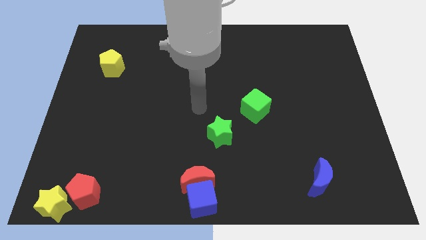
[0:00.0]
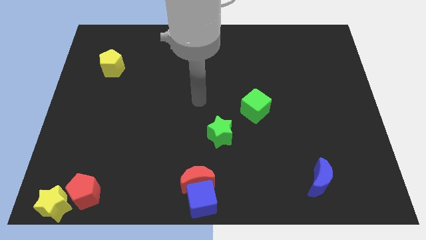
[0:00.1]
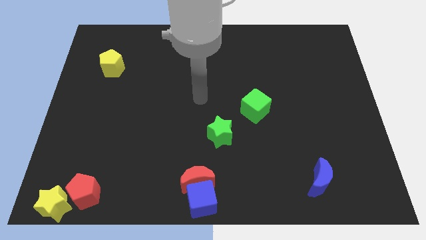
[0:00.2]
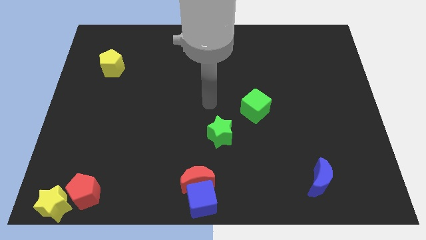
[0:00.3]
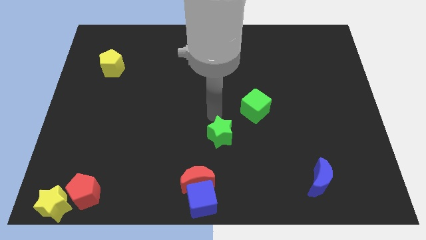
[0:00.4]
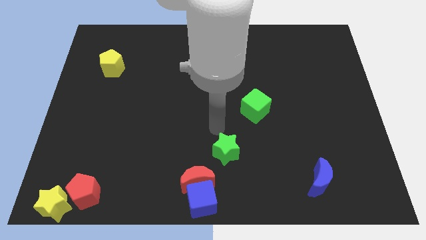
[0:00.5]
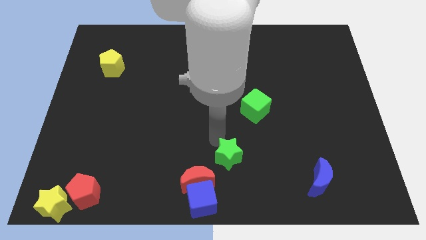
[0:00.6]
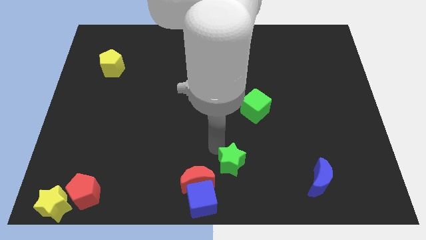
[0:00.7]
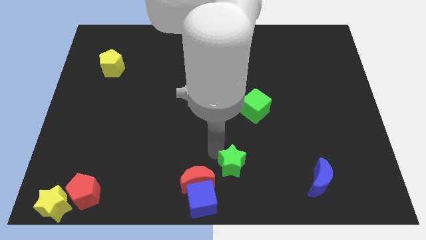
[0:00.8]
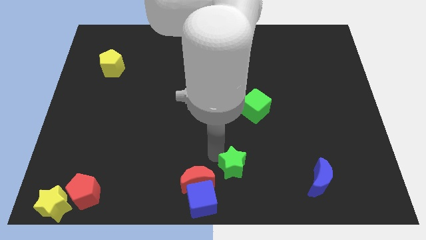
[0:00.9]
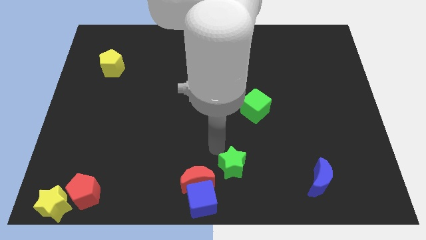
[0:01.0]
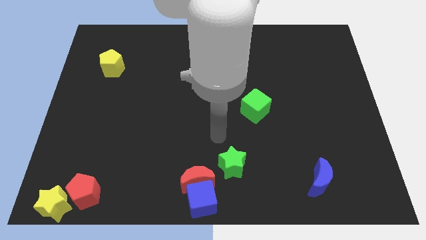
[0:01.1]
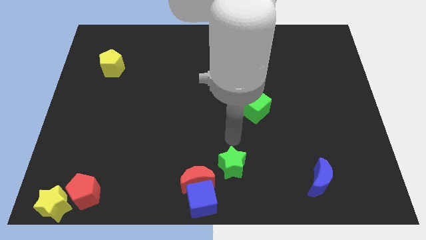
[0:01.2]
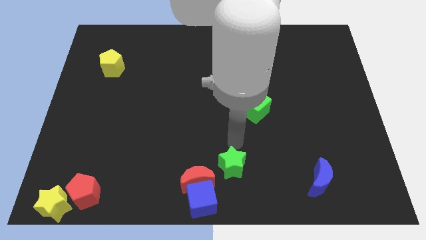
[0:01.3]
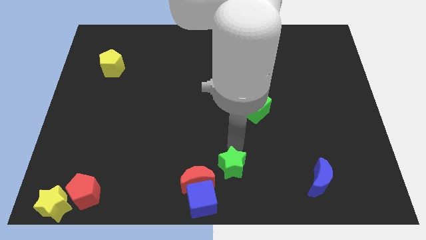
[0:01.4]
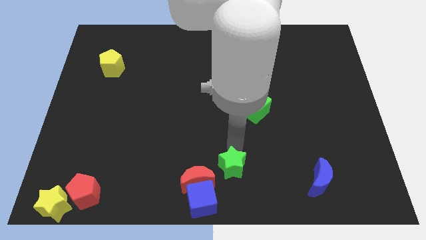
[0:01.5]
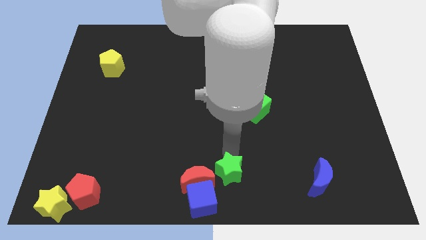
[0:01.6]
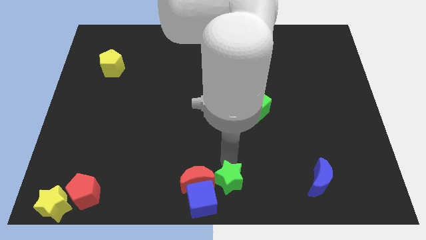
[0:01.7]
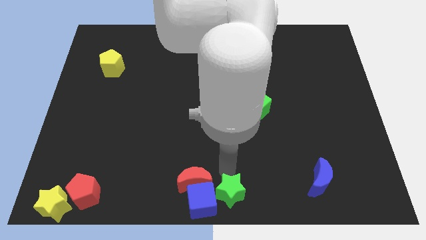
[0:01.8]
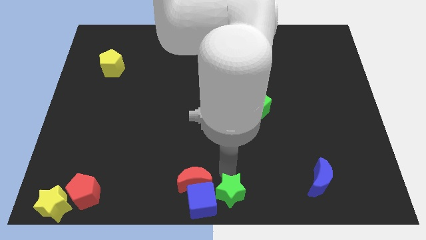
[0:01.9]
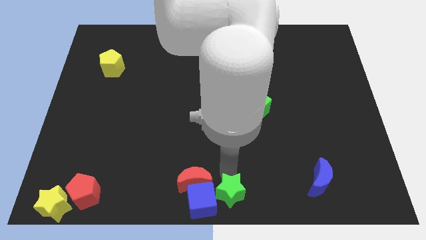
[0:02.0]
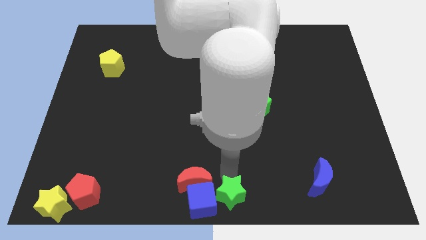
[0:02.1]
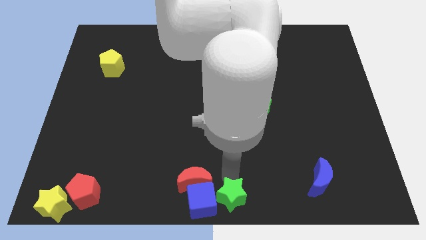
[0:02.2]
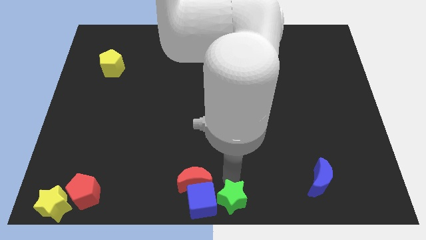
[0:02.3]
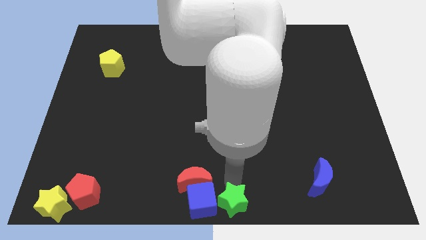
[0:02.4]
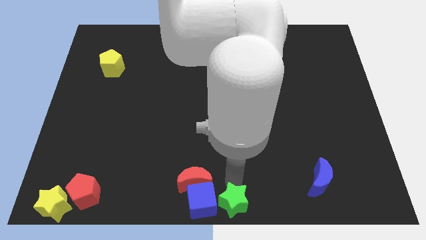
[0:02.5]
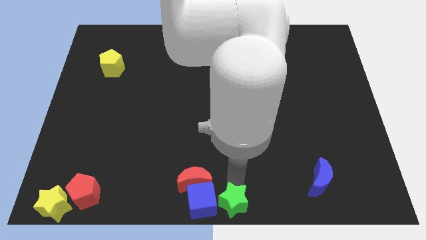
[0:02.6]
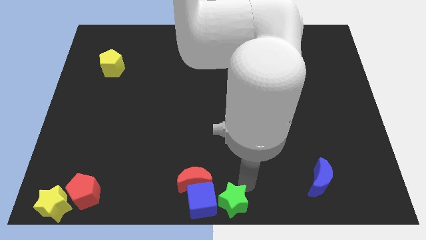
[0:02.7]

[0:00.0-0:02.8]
move the green star to the right of the blue cube

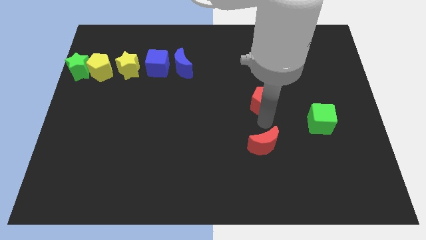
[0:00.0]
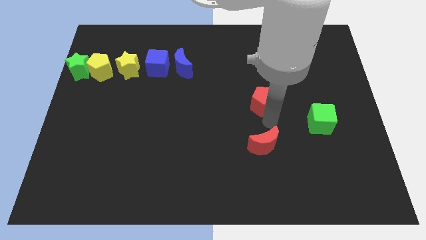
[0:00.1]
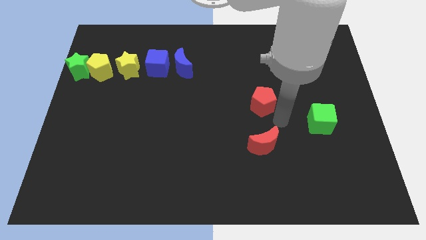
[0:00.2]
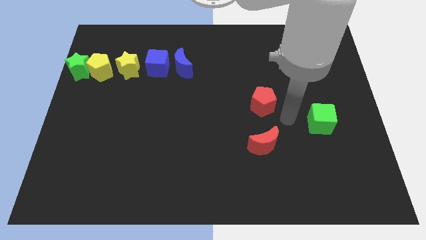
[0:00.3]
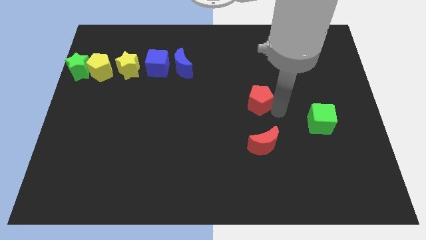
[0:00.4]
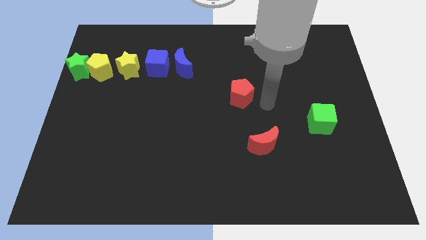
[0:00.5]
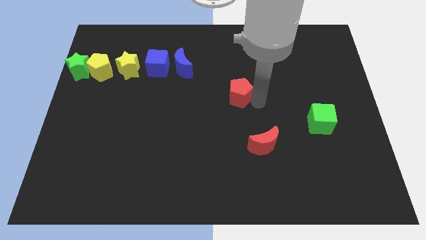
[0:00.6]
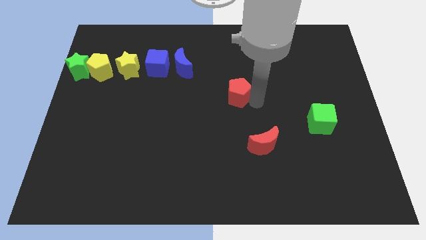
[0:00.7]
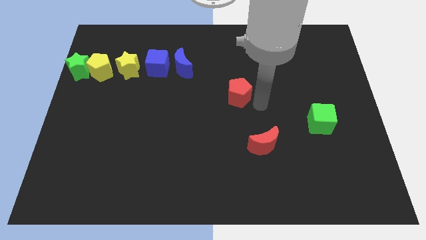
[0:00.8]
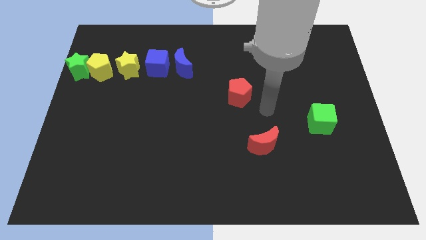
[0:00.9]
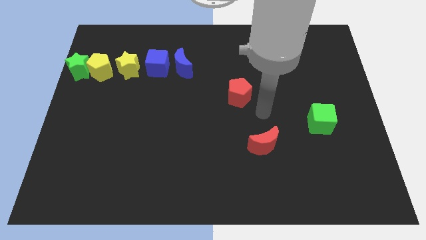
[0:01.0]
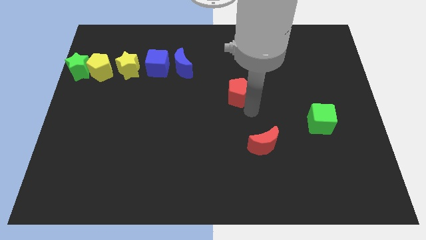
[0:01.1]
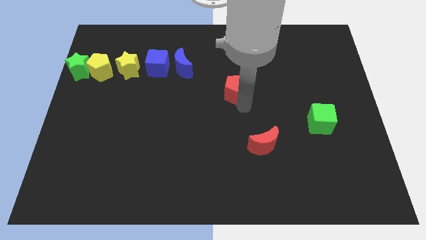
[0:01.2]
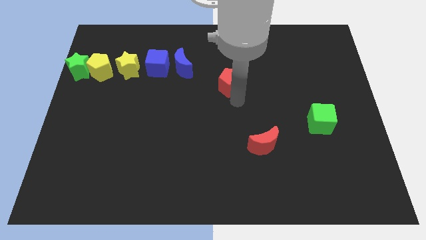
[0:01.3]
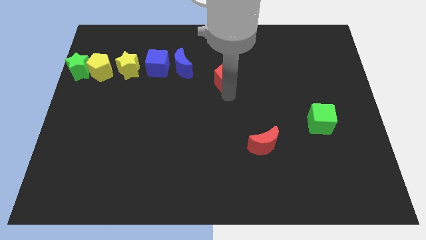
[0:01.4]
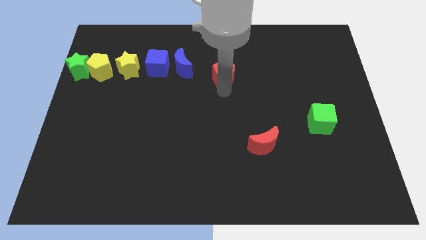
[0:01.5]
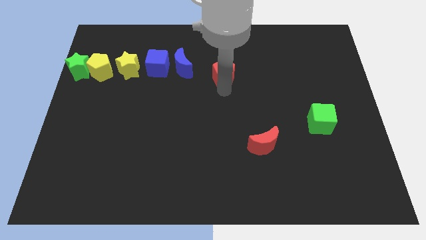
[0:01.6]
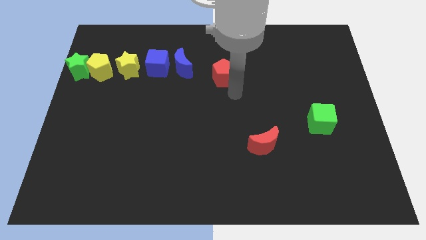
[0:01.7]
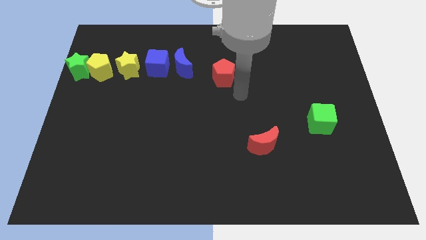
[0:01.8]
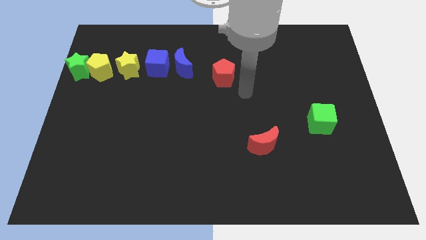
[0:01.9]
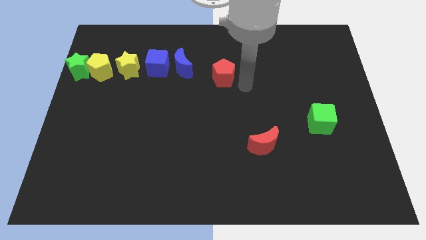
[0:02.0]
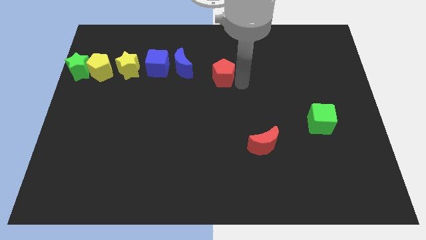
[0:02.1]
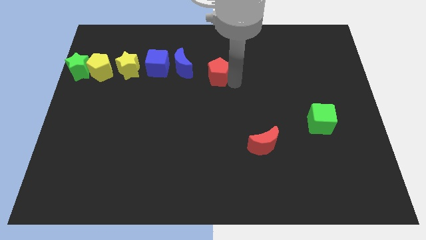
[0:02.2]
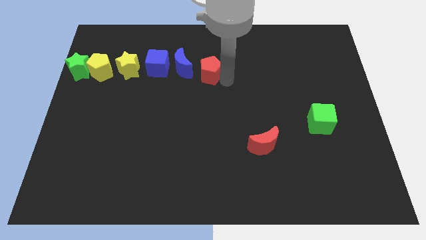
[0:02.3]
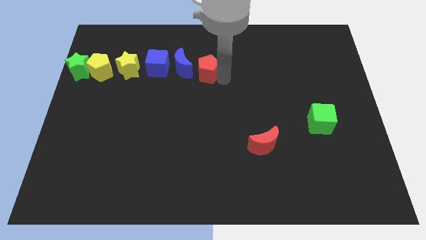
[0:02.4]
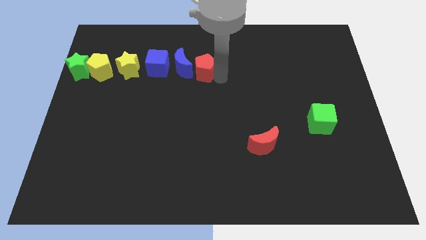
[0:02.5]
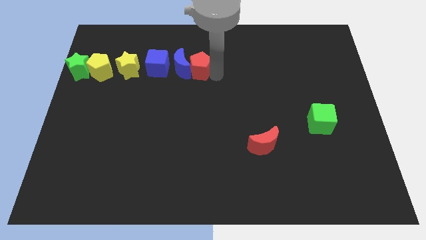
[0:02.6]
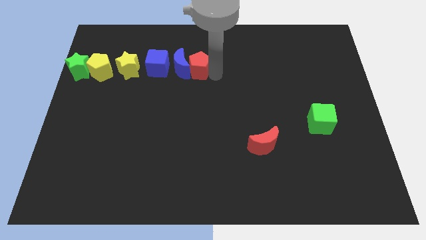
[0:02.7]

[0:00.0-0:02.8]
push the red pentagon into blue moon

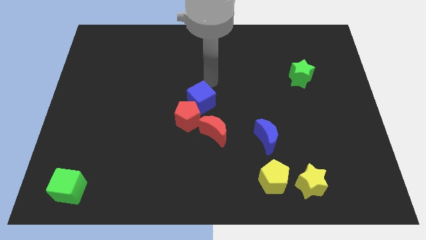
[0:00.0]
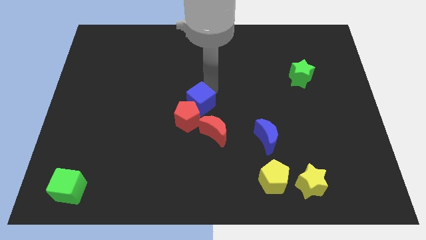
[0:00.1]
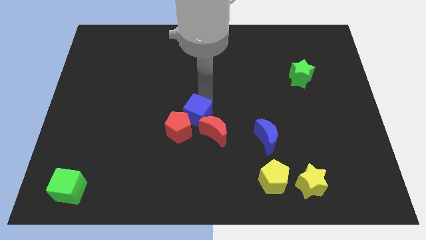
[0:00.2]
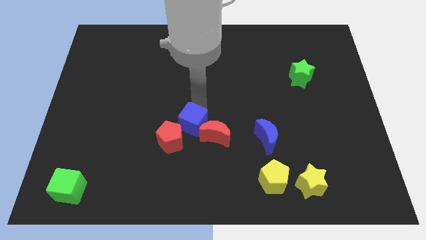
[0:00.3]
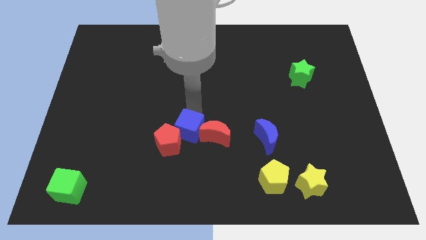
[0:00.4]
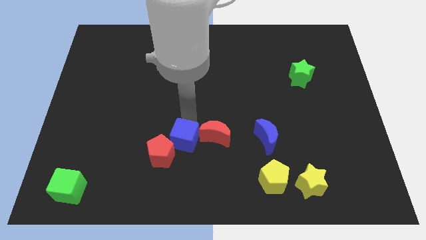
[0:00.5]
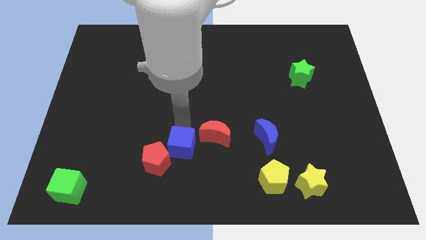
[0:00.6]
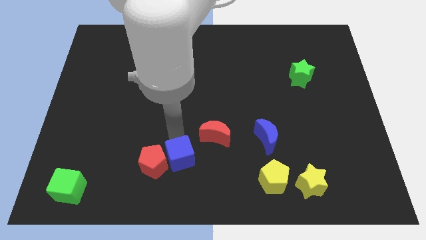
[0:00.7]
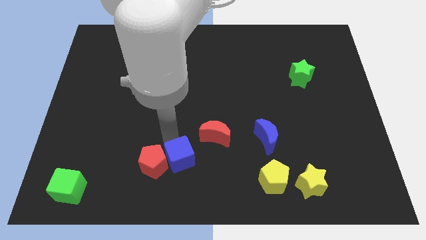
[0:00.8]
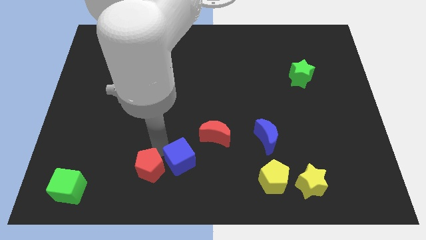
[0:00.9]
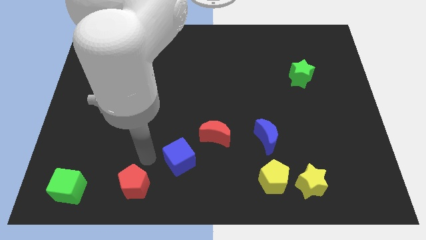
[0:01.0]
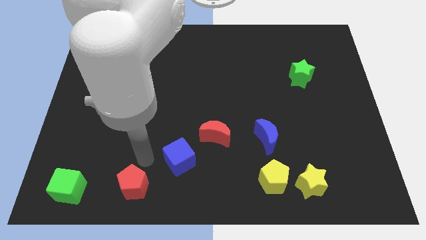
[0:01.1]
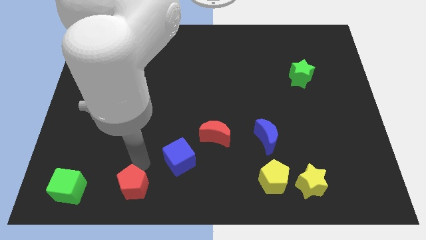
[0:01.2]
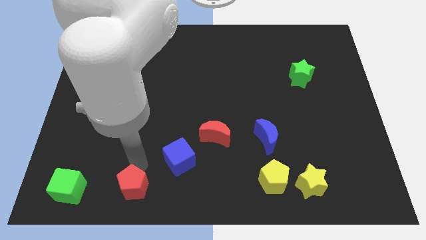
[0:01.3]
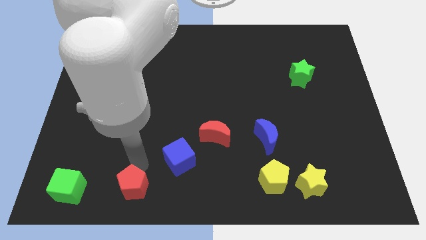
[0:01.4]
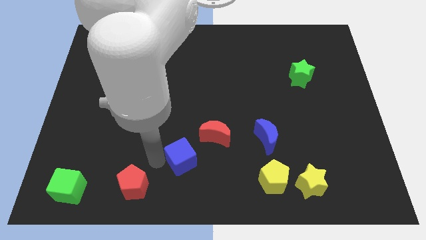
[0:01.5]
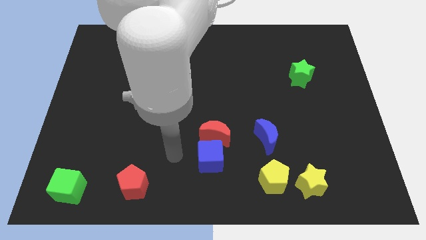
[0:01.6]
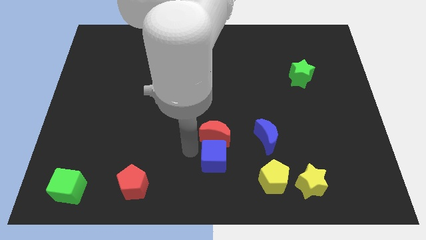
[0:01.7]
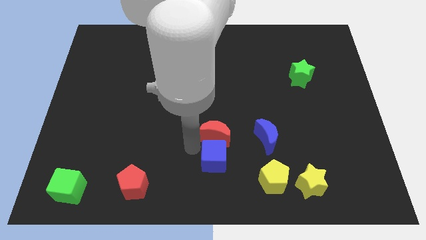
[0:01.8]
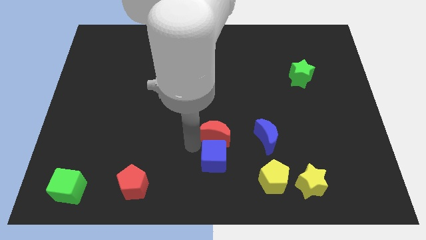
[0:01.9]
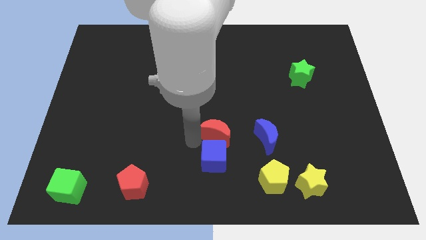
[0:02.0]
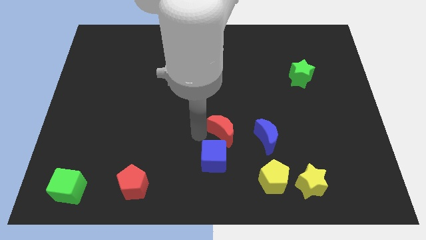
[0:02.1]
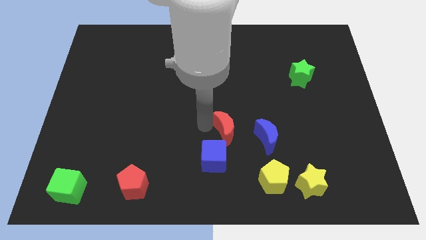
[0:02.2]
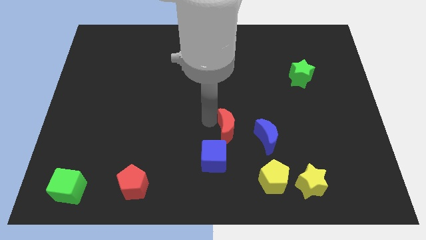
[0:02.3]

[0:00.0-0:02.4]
move the red pentagon to right side of green cube

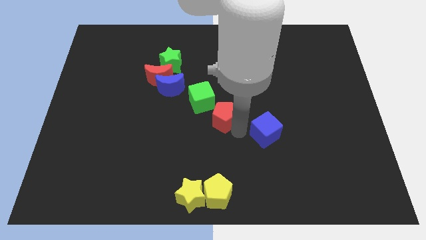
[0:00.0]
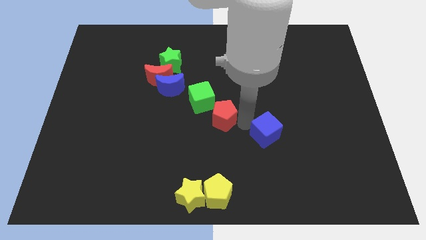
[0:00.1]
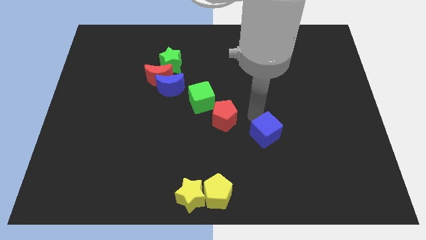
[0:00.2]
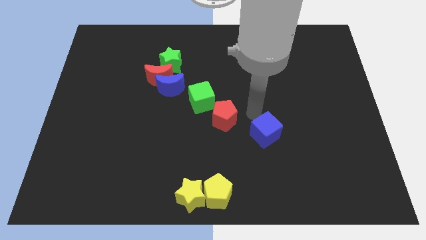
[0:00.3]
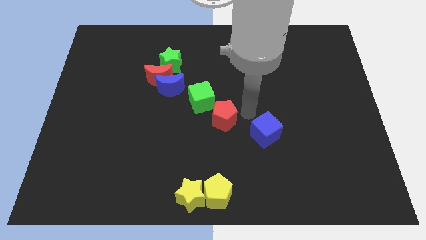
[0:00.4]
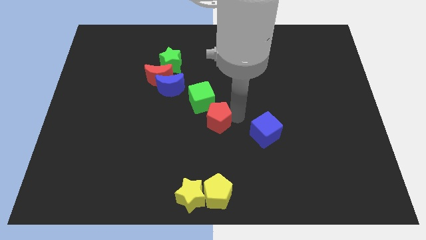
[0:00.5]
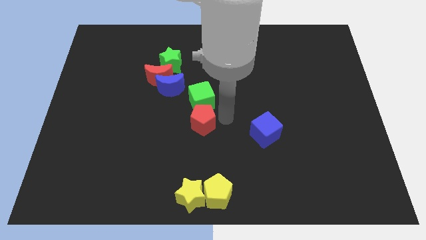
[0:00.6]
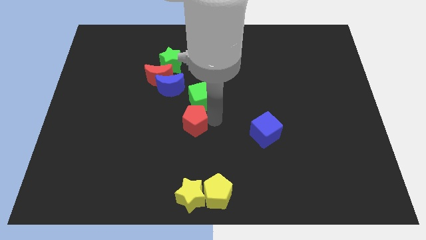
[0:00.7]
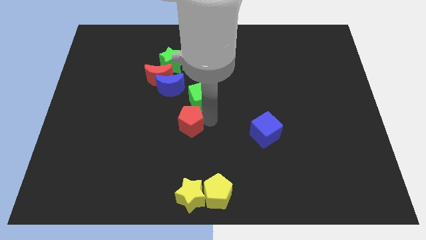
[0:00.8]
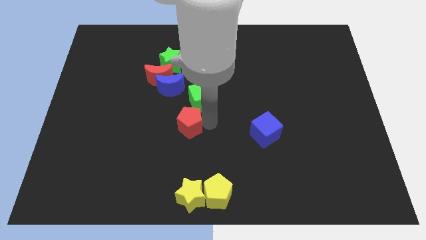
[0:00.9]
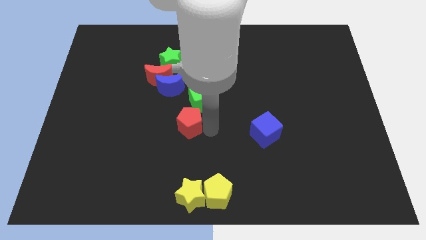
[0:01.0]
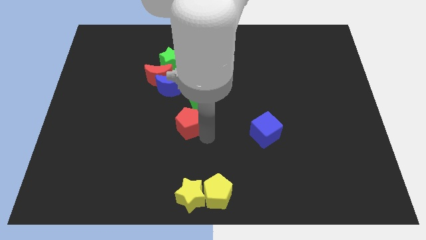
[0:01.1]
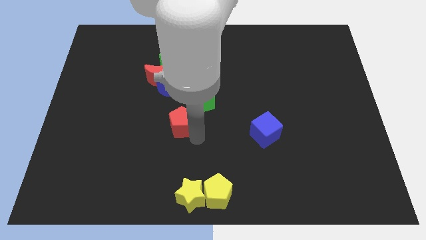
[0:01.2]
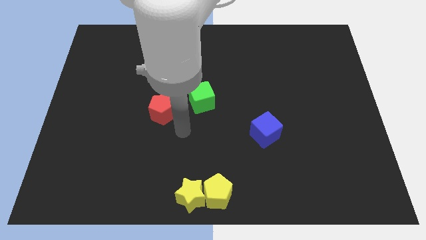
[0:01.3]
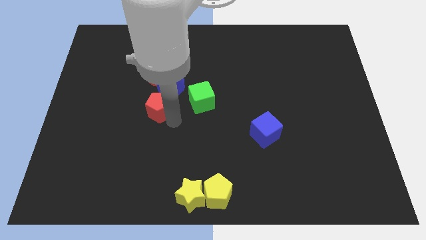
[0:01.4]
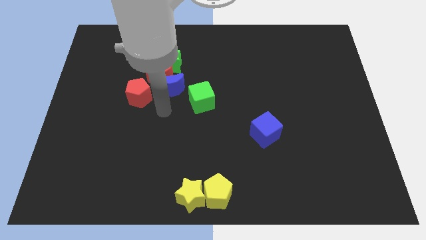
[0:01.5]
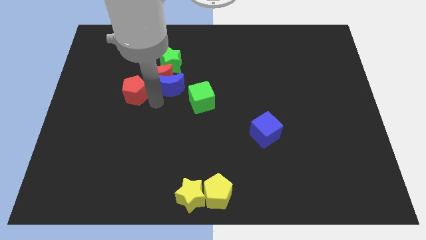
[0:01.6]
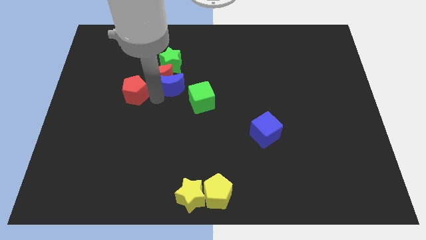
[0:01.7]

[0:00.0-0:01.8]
move red pentagon beside blue moon
